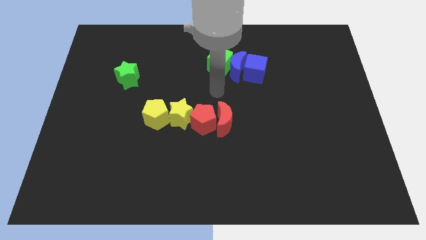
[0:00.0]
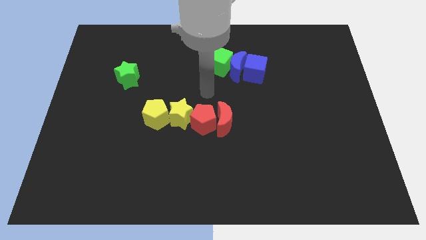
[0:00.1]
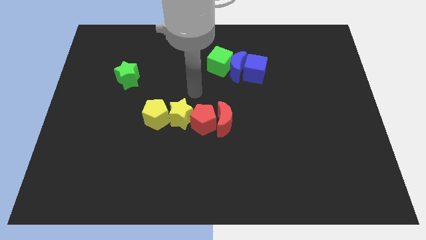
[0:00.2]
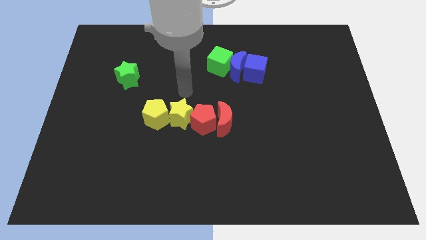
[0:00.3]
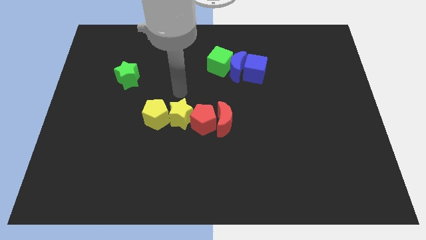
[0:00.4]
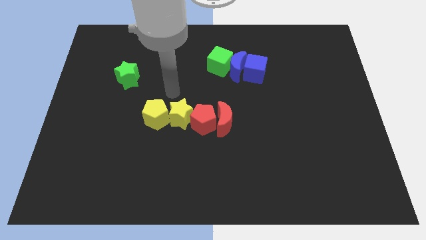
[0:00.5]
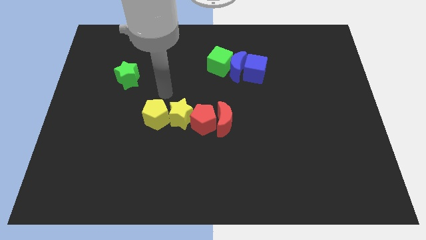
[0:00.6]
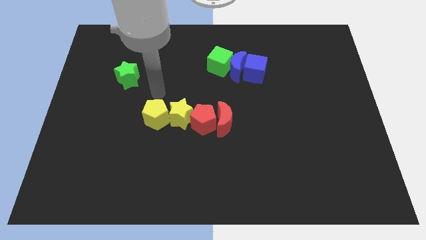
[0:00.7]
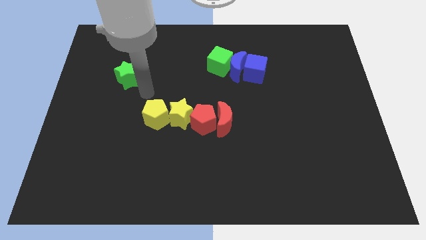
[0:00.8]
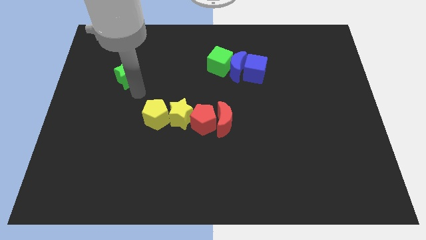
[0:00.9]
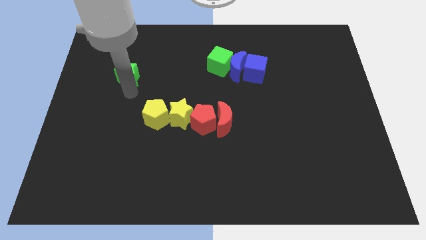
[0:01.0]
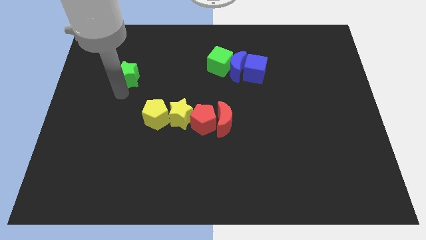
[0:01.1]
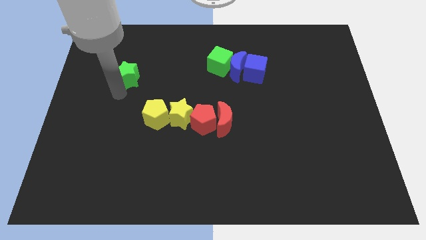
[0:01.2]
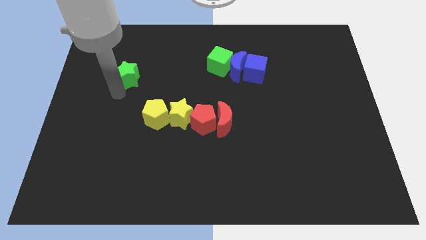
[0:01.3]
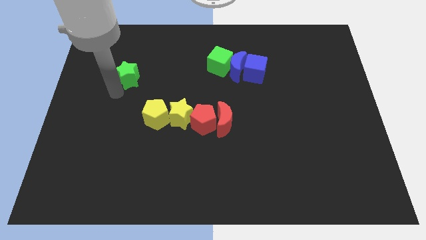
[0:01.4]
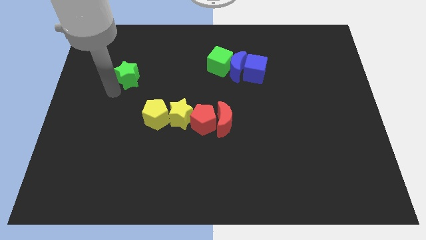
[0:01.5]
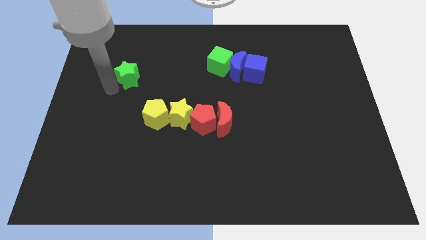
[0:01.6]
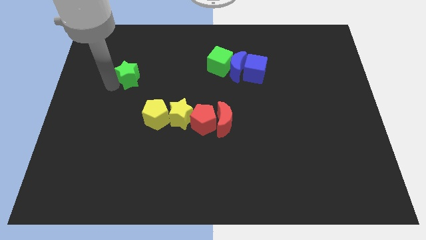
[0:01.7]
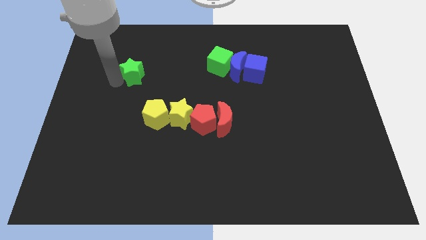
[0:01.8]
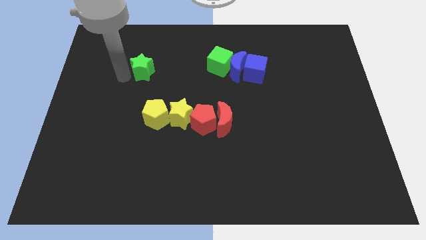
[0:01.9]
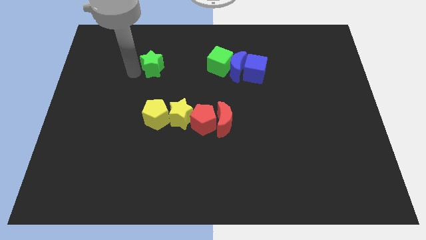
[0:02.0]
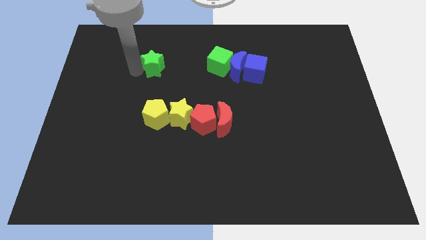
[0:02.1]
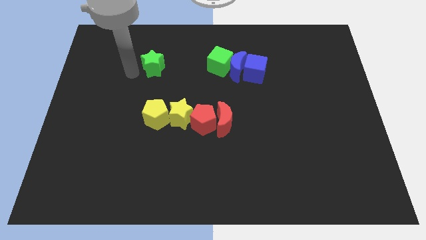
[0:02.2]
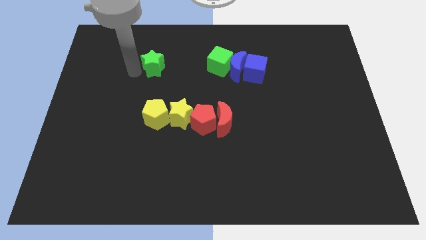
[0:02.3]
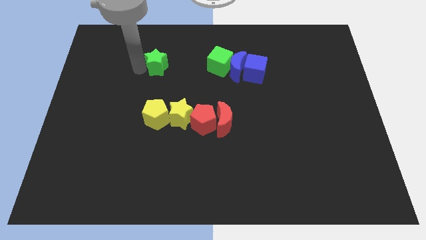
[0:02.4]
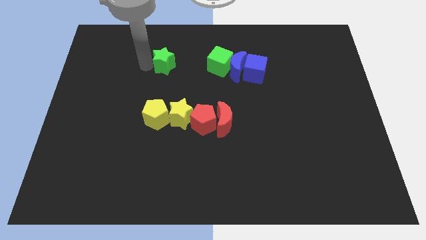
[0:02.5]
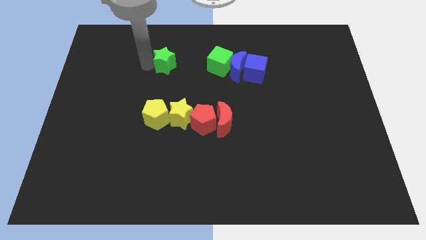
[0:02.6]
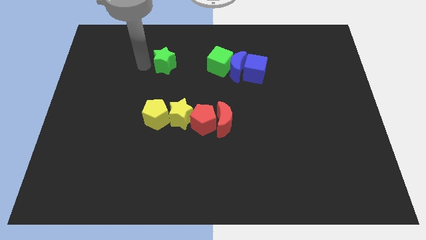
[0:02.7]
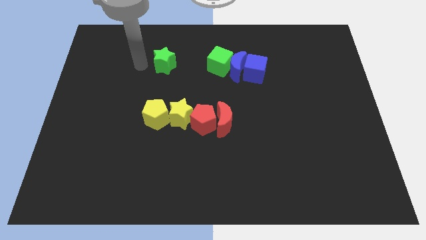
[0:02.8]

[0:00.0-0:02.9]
move the green star above the yellow pentagon

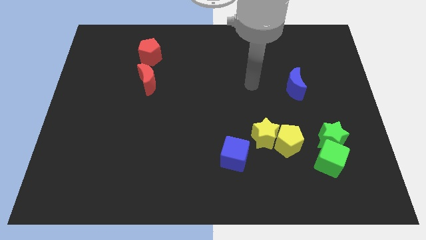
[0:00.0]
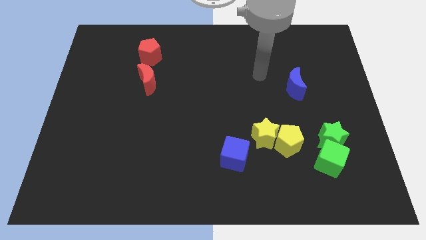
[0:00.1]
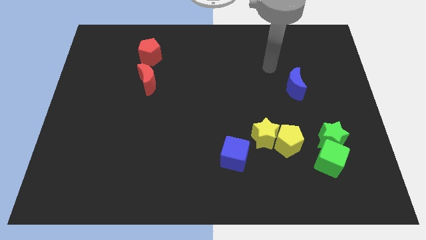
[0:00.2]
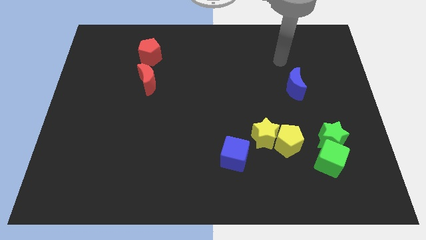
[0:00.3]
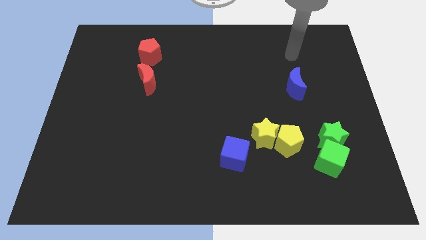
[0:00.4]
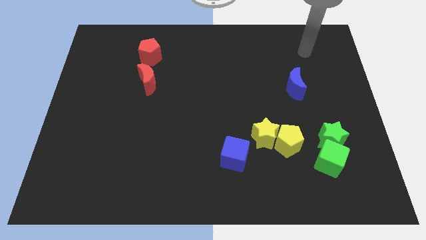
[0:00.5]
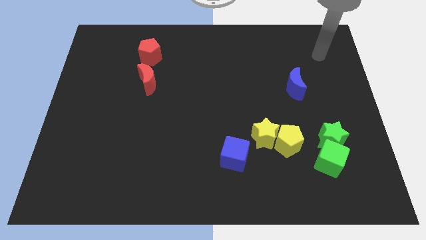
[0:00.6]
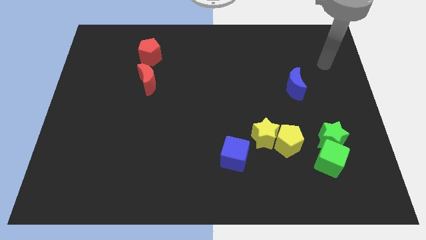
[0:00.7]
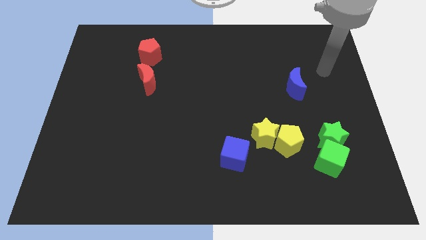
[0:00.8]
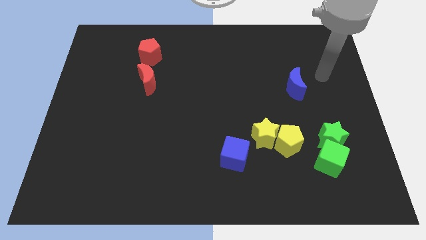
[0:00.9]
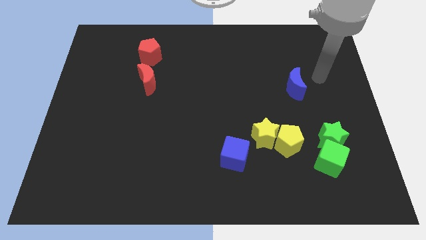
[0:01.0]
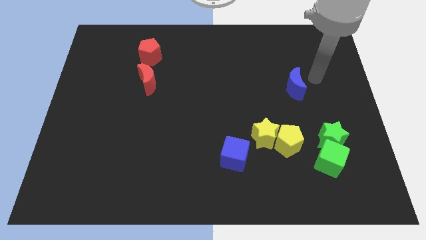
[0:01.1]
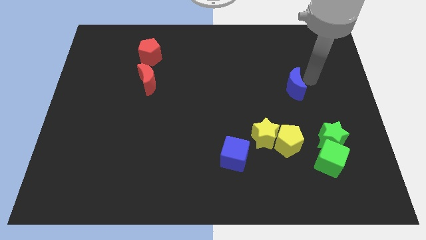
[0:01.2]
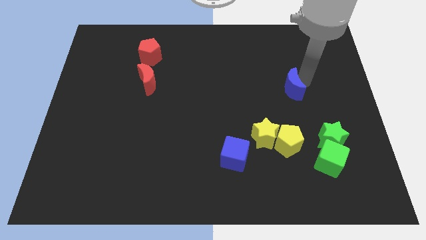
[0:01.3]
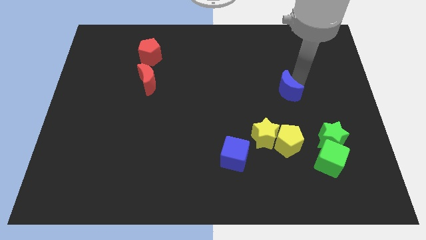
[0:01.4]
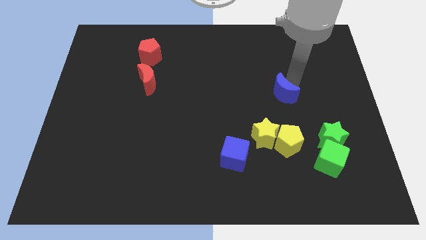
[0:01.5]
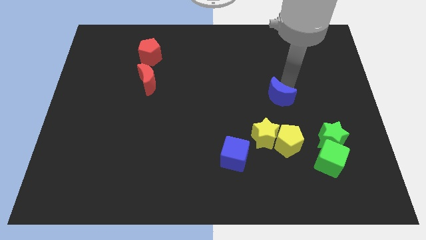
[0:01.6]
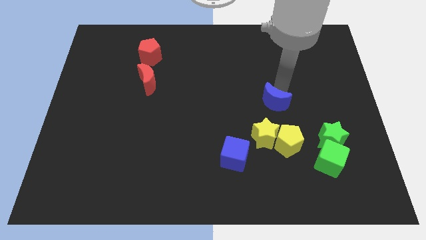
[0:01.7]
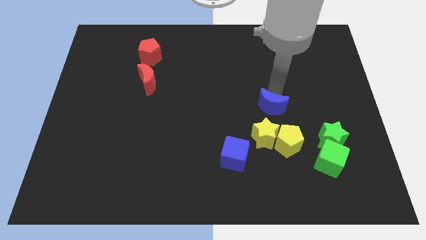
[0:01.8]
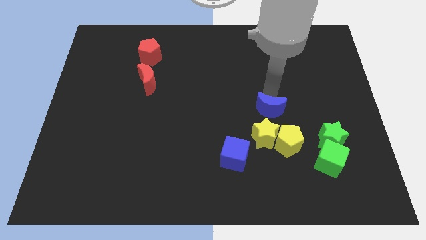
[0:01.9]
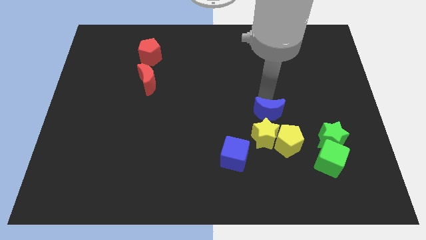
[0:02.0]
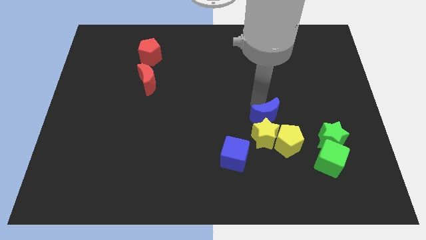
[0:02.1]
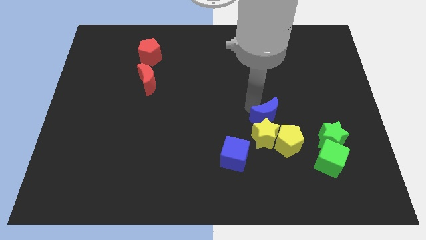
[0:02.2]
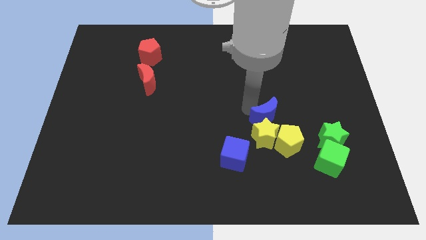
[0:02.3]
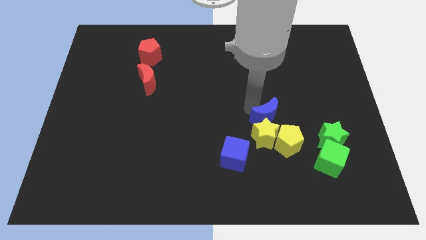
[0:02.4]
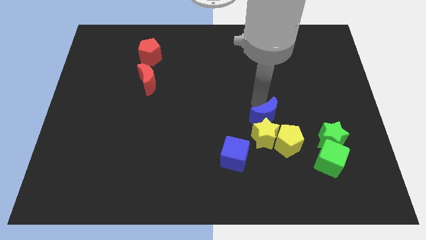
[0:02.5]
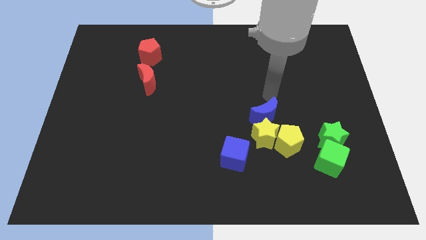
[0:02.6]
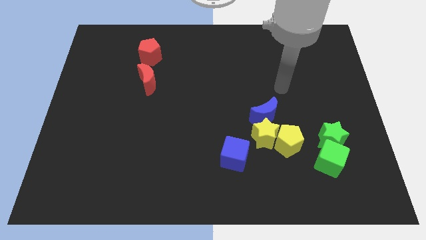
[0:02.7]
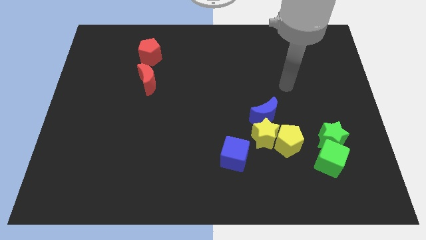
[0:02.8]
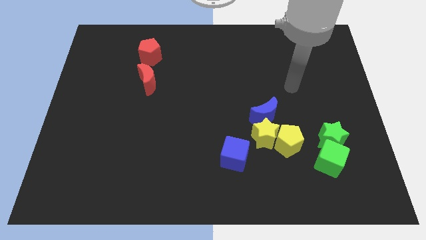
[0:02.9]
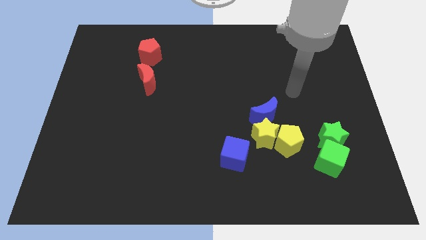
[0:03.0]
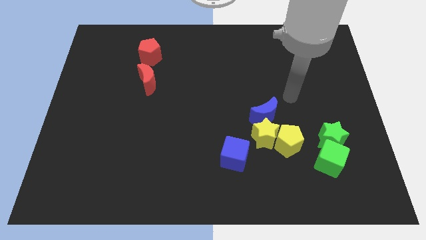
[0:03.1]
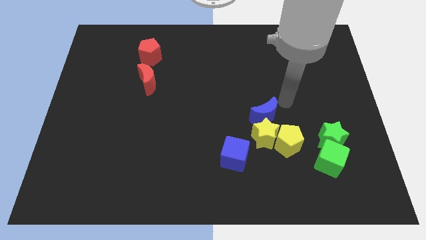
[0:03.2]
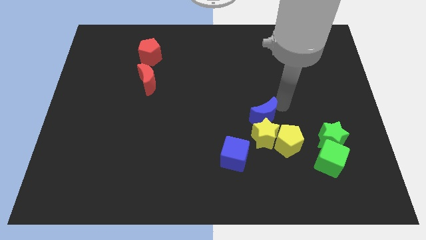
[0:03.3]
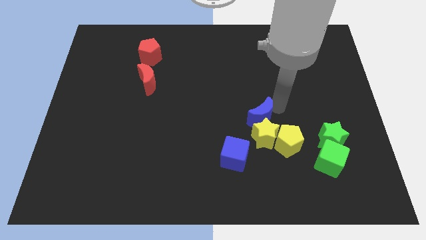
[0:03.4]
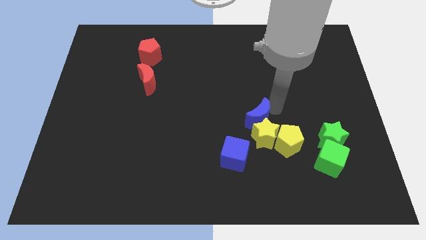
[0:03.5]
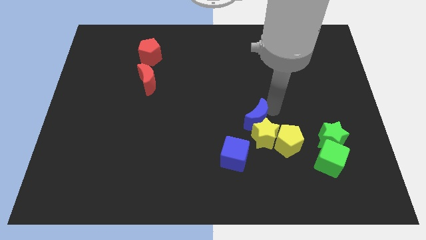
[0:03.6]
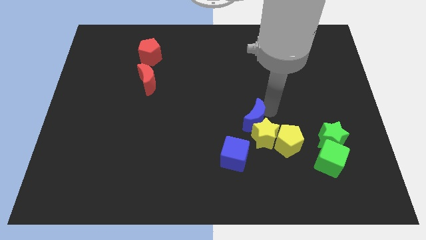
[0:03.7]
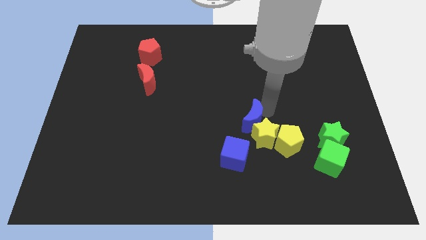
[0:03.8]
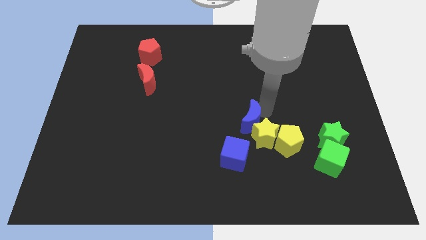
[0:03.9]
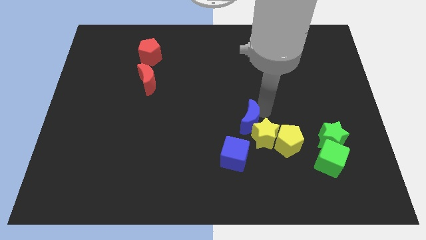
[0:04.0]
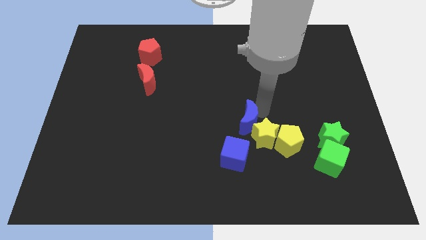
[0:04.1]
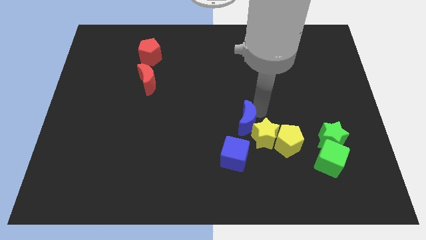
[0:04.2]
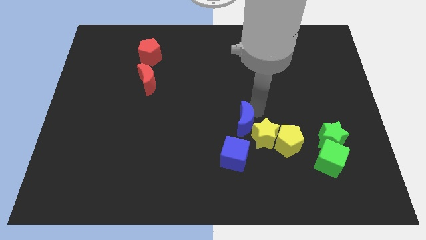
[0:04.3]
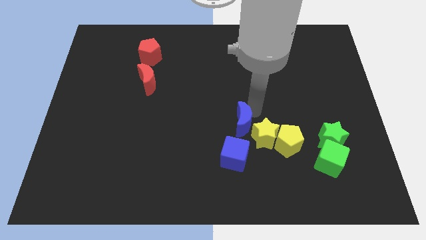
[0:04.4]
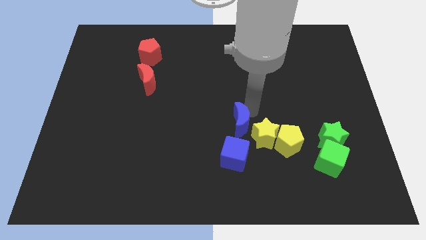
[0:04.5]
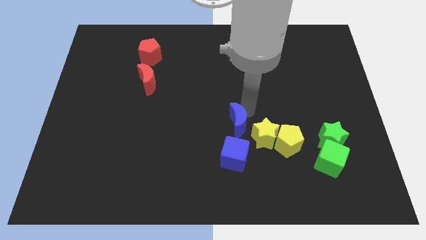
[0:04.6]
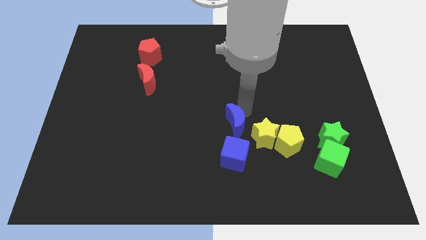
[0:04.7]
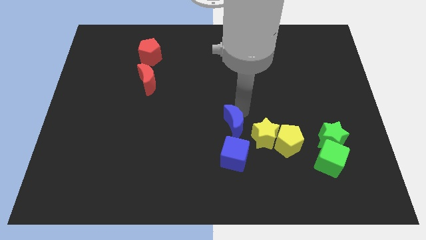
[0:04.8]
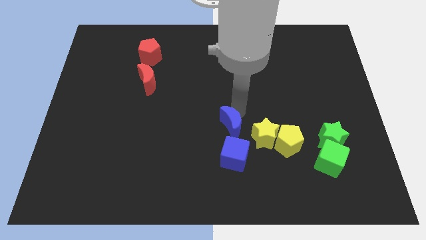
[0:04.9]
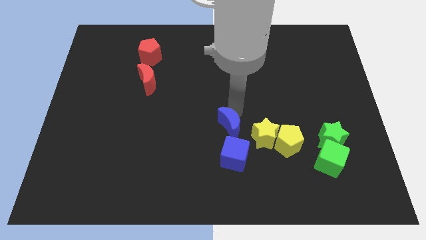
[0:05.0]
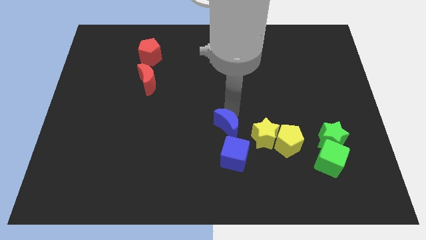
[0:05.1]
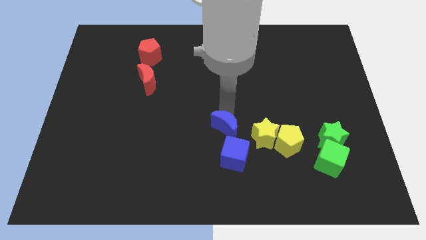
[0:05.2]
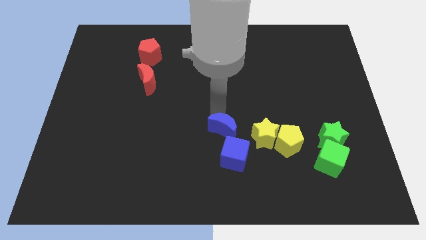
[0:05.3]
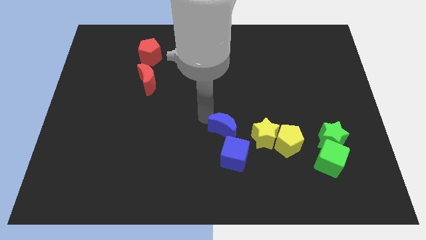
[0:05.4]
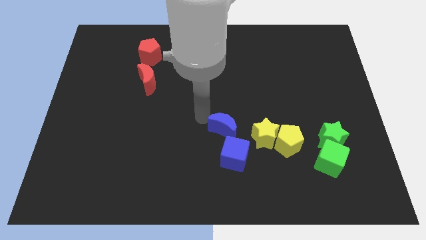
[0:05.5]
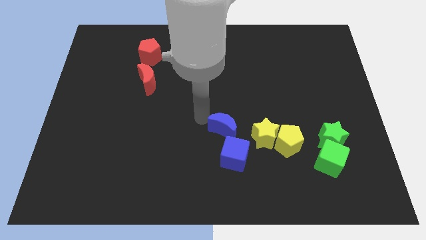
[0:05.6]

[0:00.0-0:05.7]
push the blue crescent to the center of the board

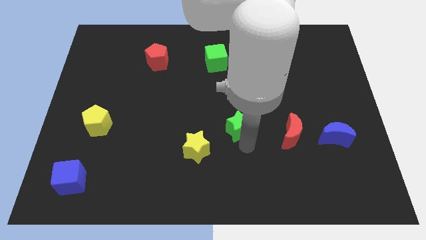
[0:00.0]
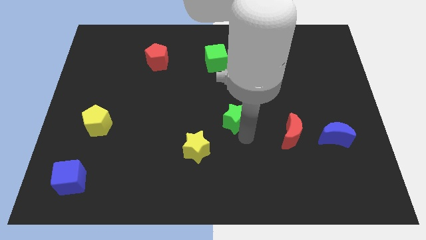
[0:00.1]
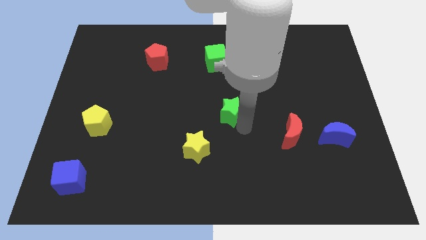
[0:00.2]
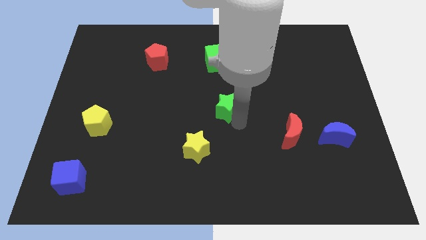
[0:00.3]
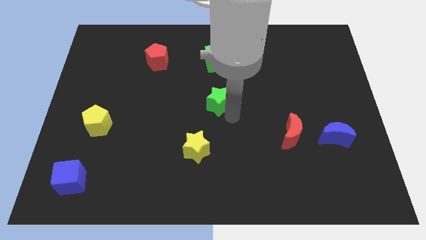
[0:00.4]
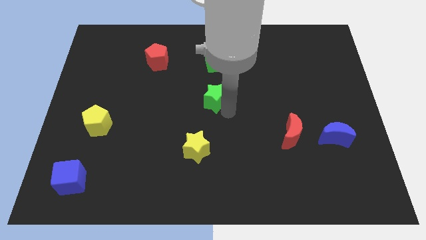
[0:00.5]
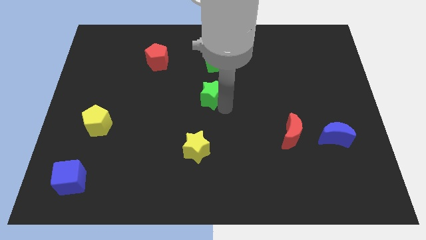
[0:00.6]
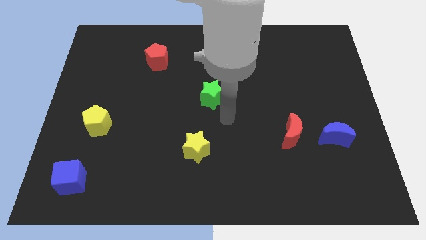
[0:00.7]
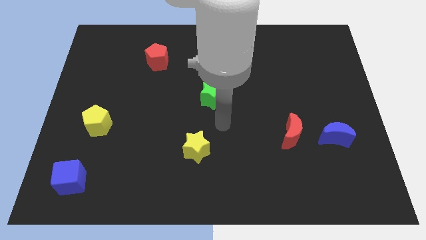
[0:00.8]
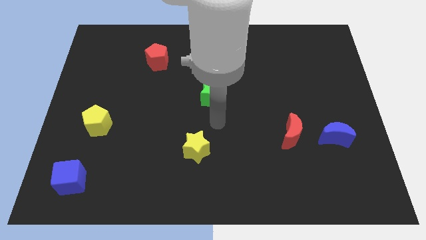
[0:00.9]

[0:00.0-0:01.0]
place the green star to the center of board
